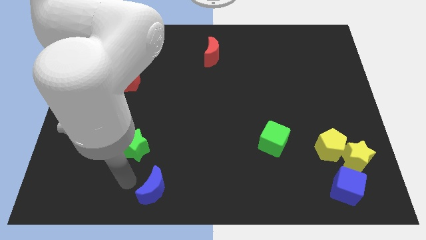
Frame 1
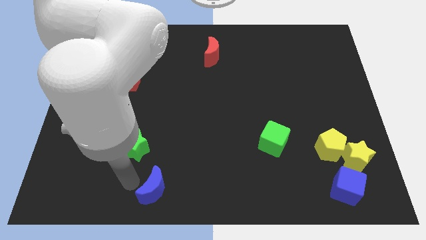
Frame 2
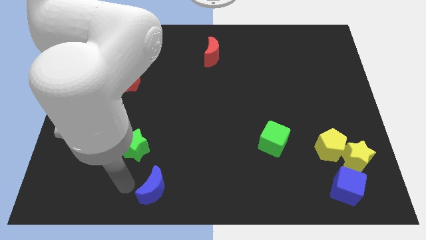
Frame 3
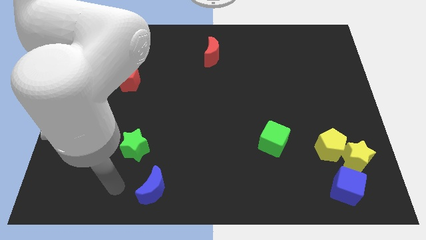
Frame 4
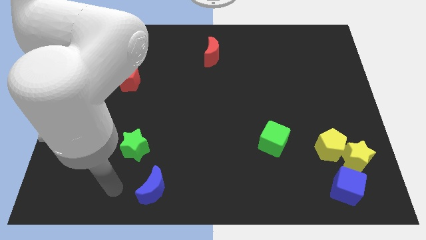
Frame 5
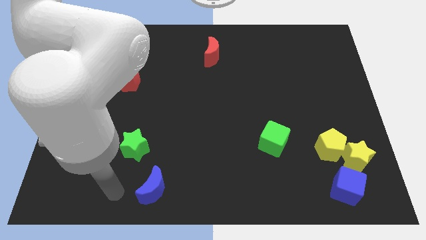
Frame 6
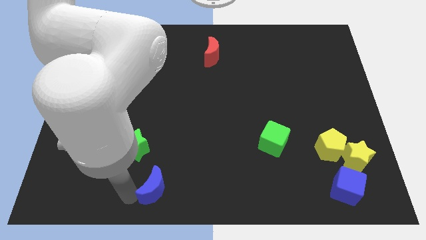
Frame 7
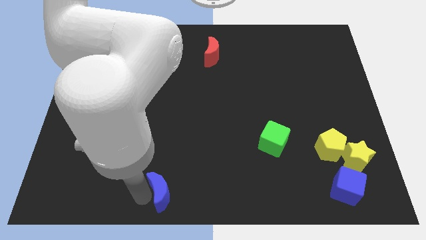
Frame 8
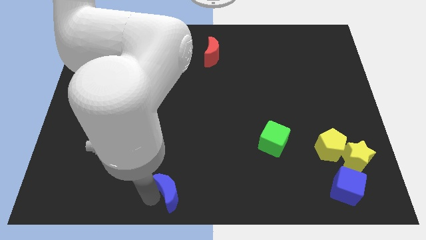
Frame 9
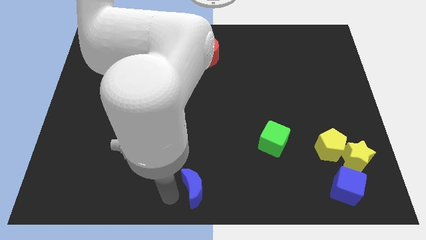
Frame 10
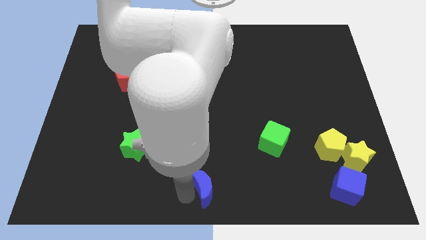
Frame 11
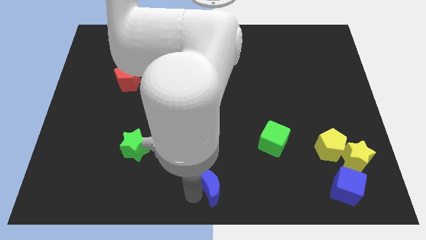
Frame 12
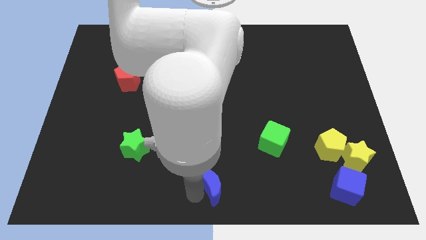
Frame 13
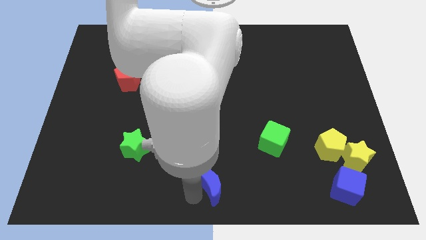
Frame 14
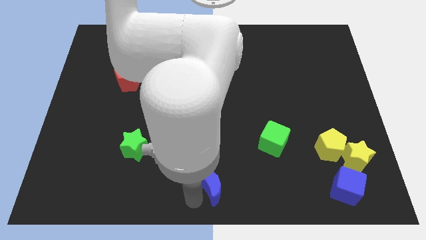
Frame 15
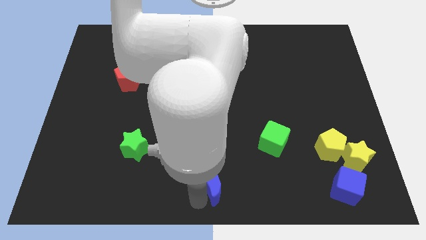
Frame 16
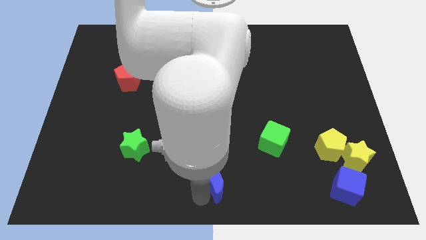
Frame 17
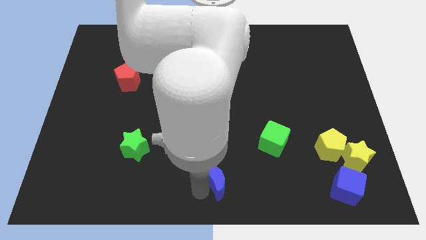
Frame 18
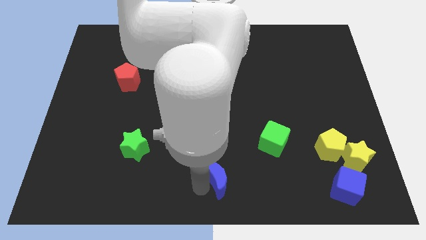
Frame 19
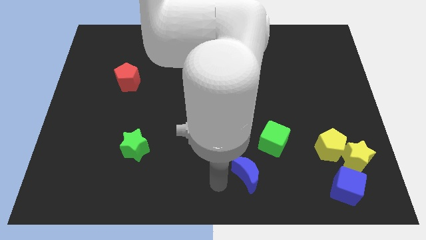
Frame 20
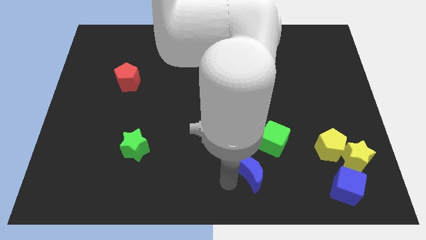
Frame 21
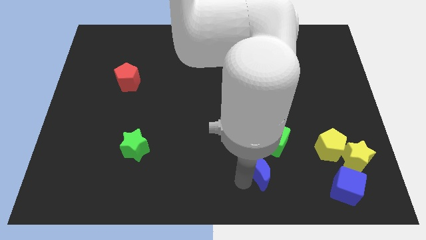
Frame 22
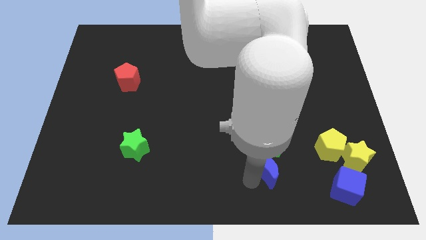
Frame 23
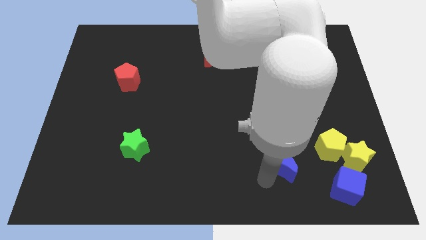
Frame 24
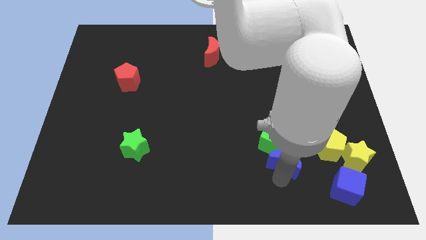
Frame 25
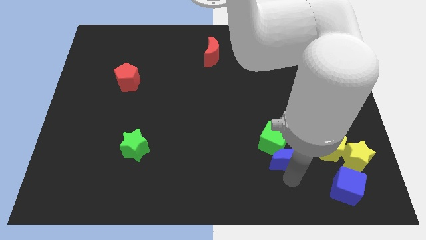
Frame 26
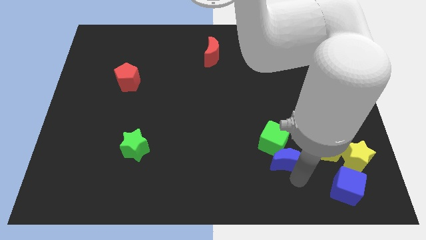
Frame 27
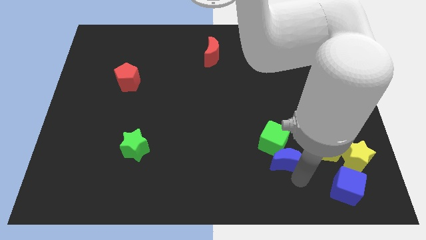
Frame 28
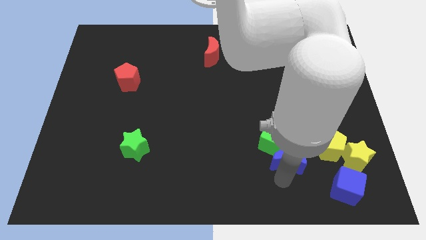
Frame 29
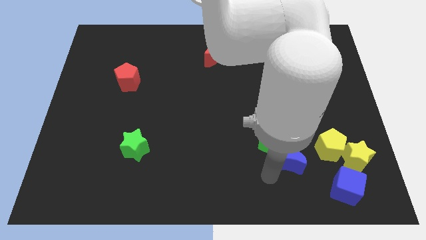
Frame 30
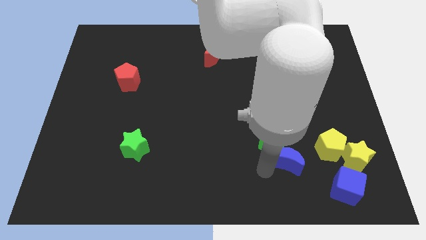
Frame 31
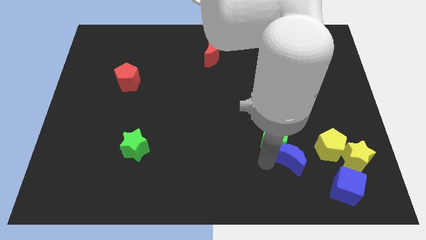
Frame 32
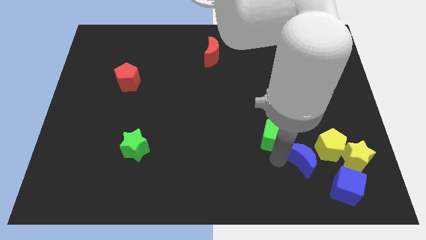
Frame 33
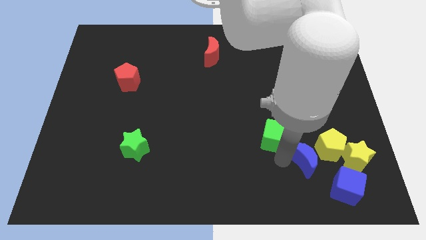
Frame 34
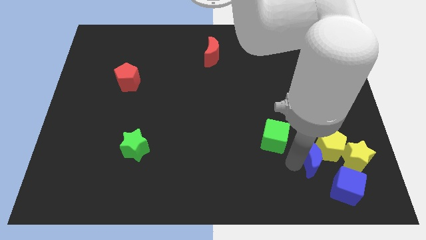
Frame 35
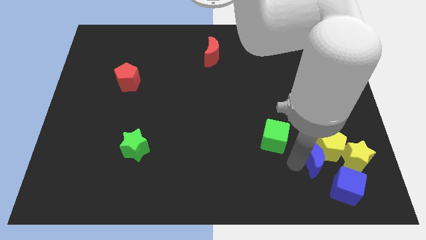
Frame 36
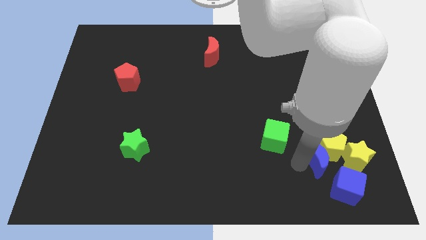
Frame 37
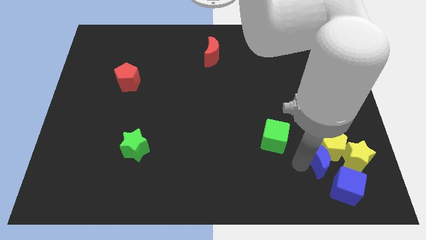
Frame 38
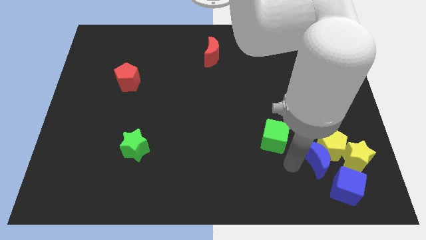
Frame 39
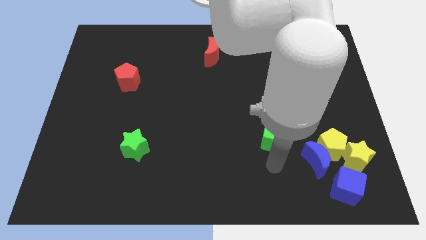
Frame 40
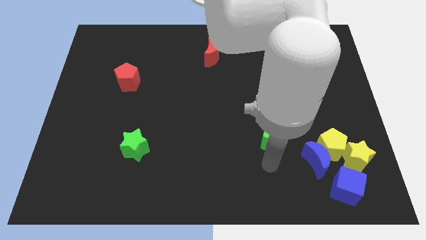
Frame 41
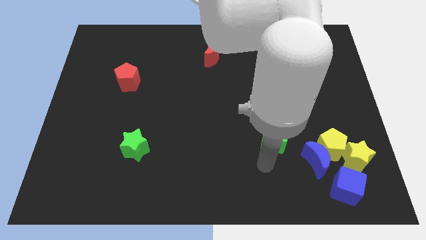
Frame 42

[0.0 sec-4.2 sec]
move the blue crescent to the left of the yellow pentgaon

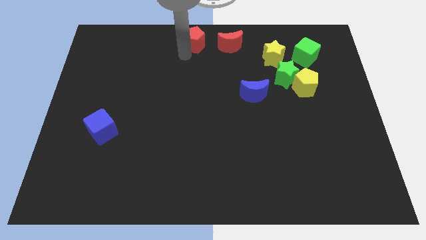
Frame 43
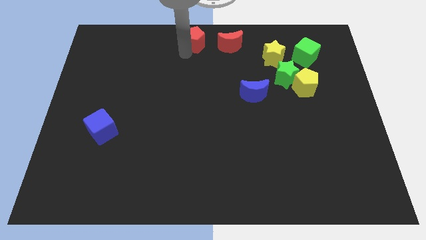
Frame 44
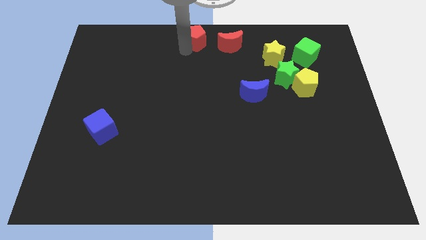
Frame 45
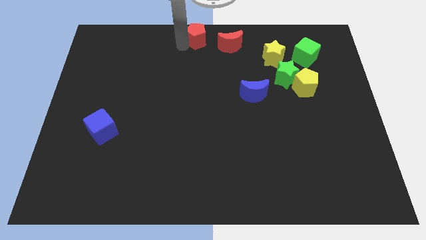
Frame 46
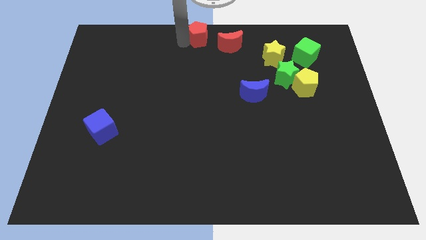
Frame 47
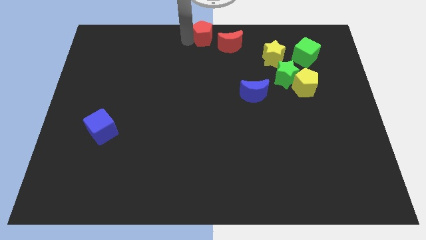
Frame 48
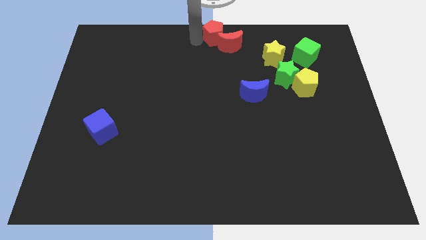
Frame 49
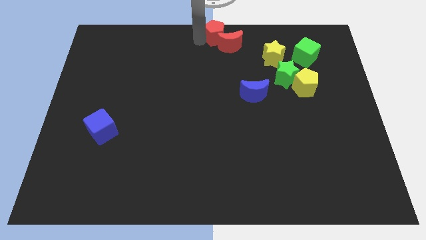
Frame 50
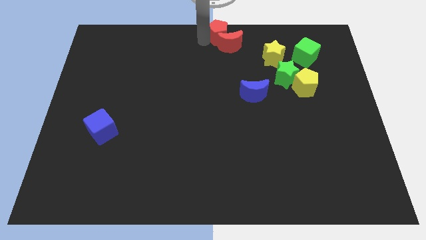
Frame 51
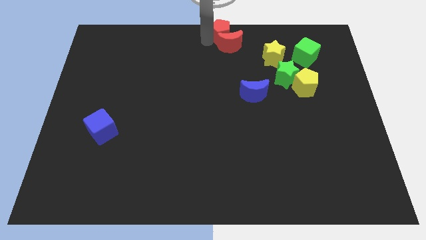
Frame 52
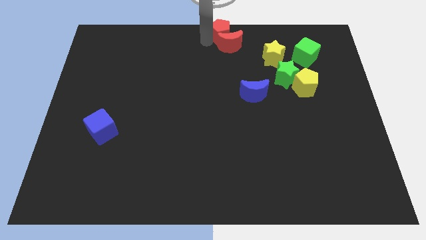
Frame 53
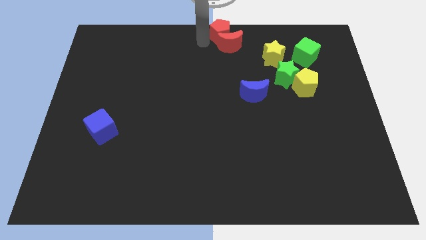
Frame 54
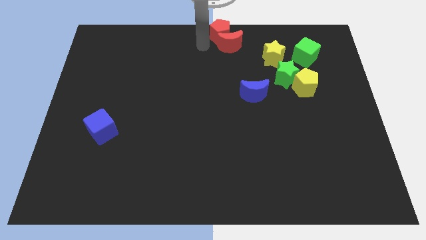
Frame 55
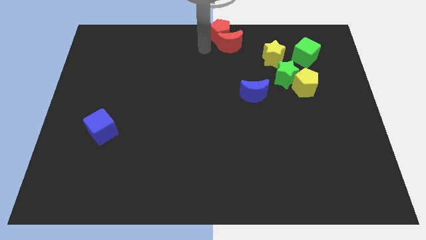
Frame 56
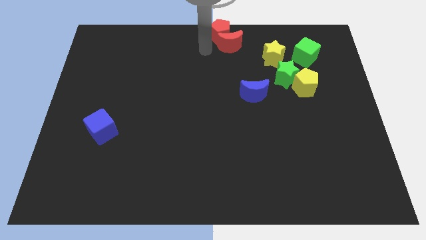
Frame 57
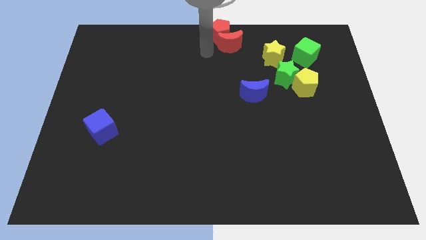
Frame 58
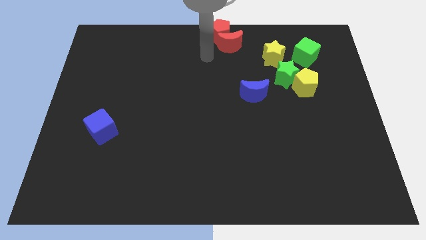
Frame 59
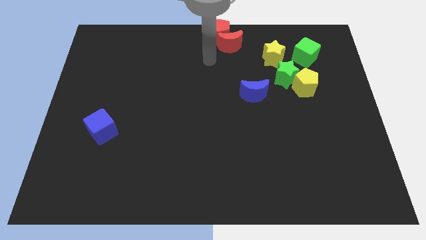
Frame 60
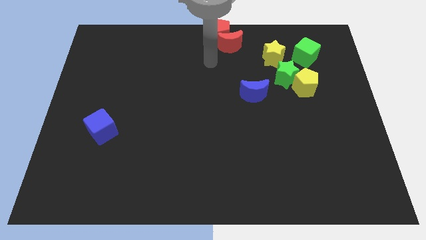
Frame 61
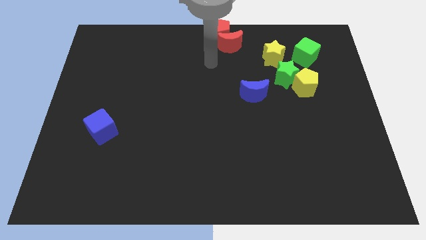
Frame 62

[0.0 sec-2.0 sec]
place red pentagon to the top left of red crescent

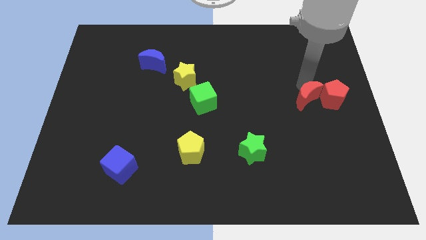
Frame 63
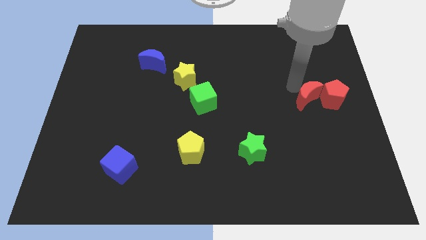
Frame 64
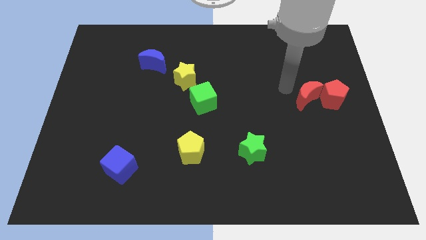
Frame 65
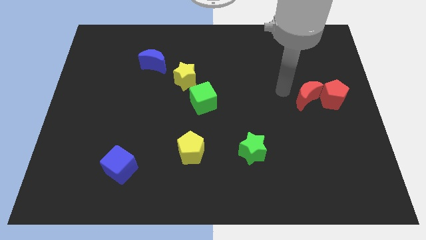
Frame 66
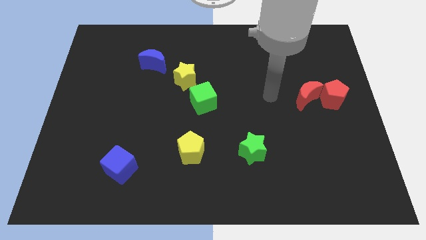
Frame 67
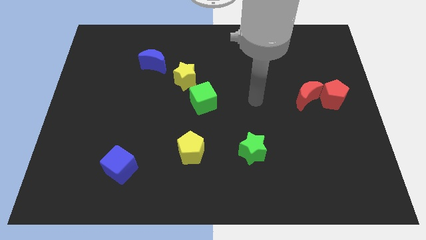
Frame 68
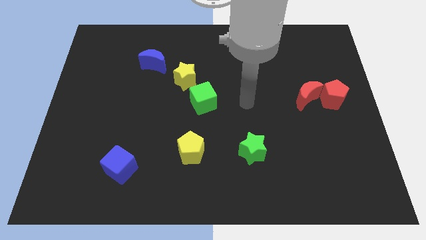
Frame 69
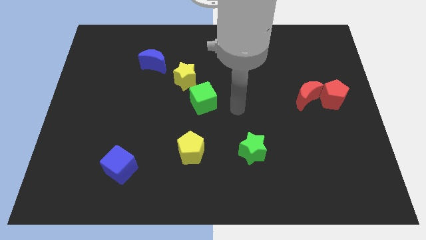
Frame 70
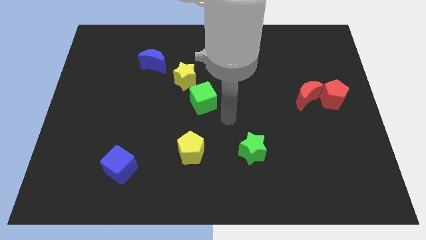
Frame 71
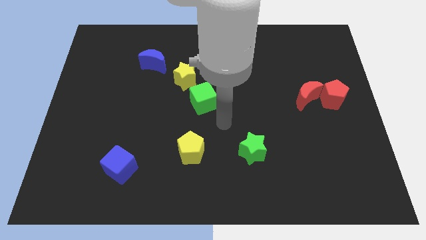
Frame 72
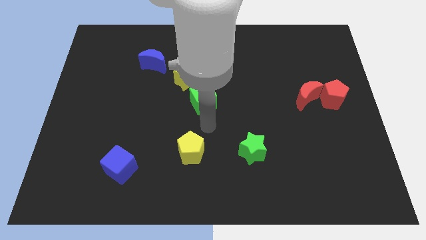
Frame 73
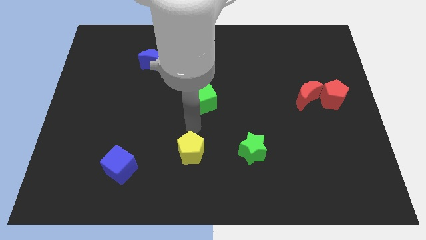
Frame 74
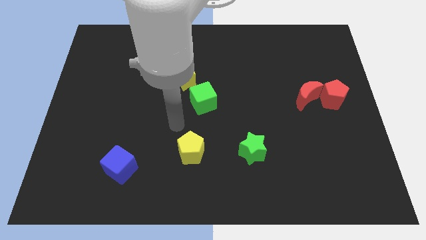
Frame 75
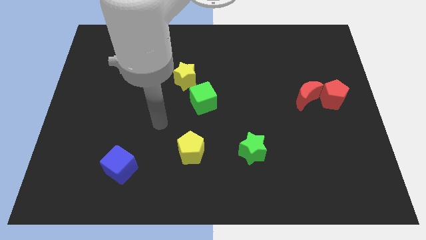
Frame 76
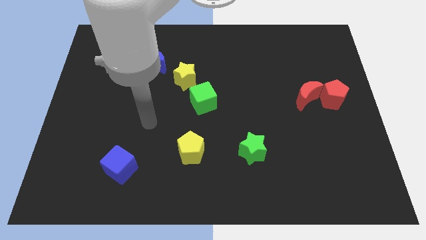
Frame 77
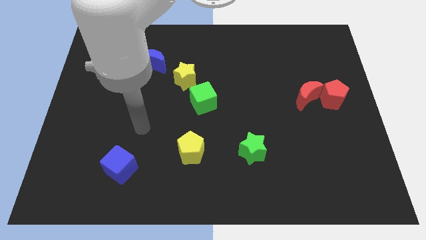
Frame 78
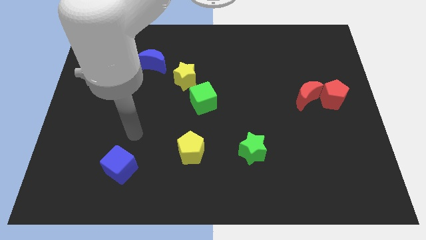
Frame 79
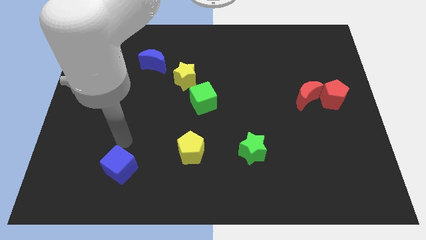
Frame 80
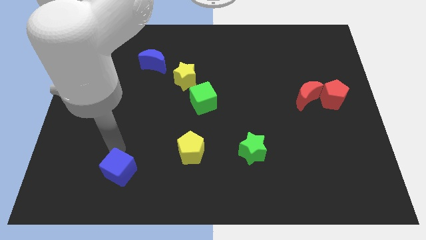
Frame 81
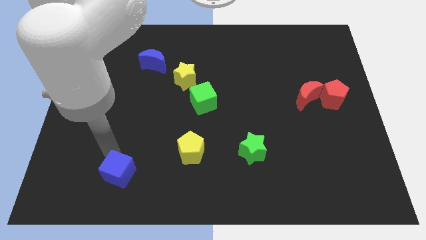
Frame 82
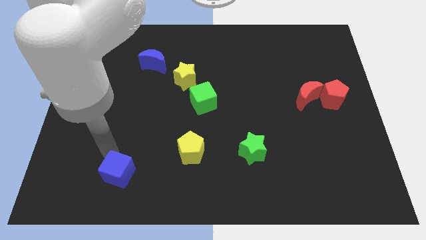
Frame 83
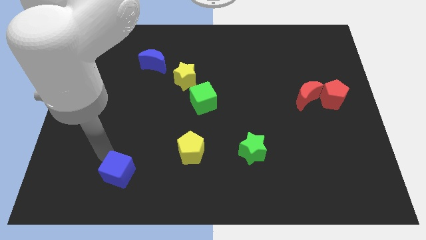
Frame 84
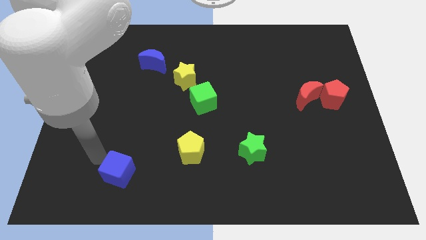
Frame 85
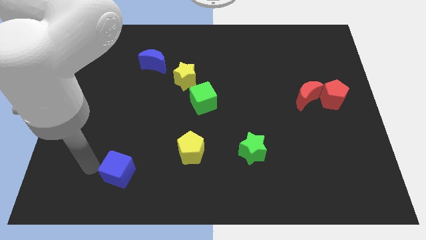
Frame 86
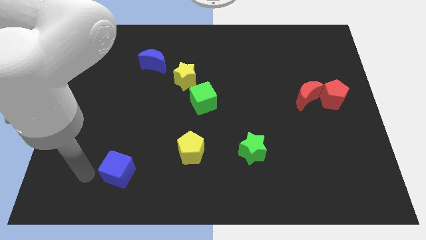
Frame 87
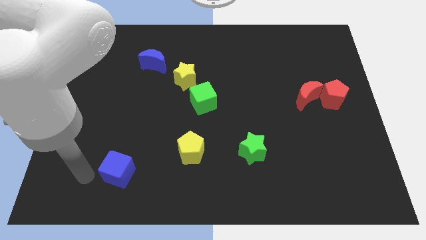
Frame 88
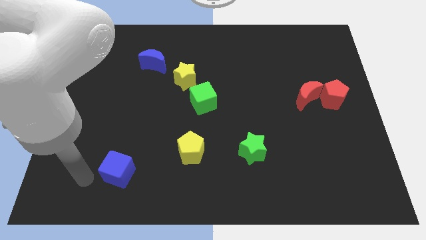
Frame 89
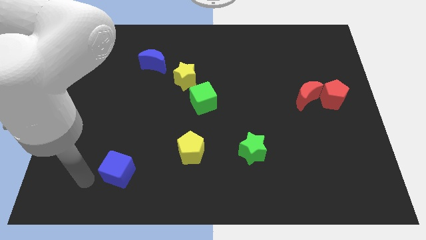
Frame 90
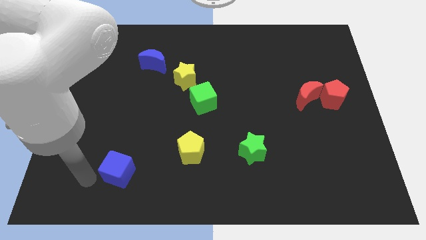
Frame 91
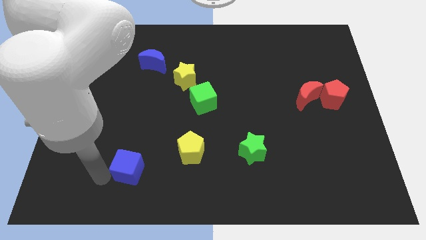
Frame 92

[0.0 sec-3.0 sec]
tap the top side of the blue cube
